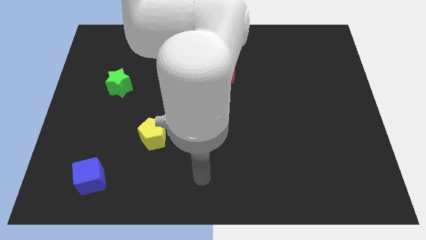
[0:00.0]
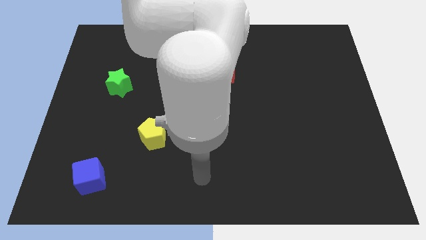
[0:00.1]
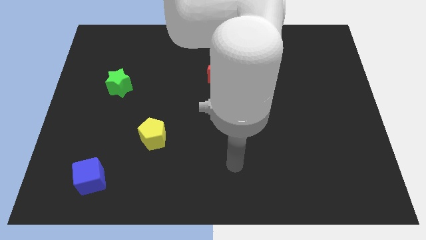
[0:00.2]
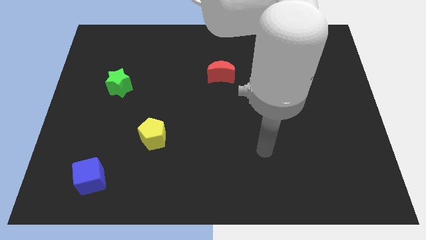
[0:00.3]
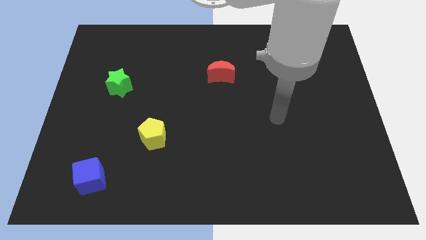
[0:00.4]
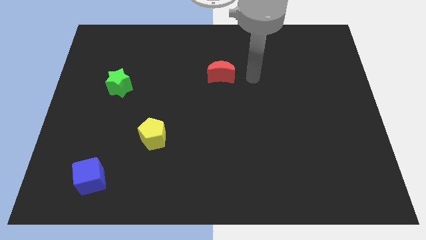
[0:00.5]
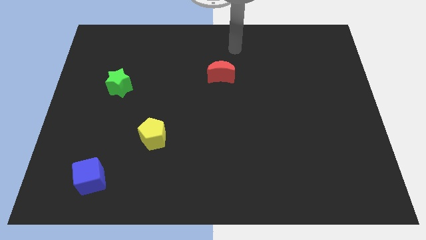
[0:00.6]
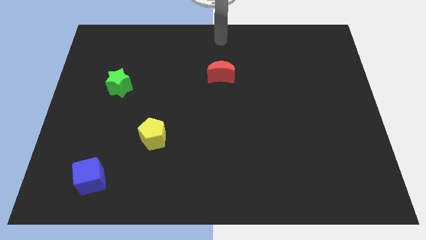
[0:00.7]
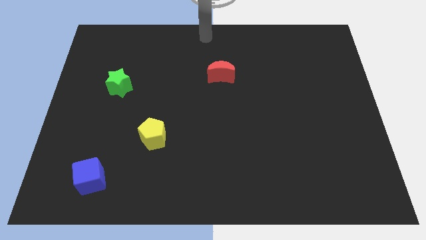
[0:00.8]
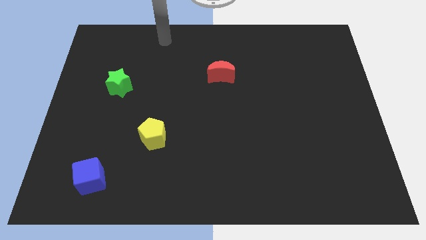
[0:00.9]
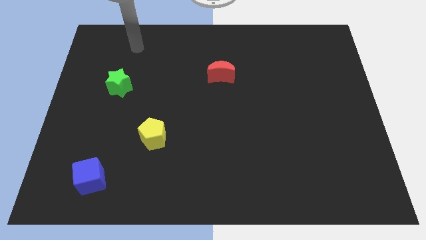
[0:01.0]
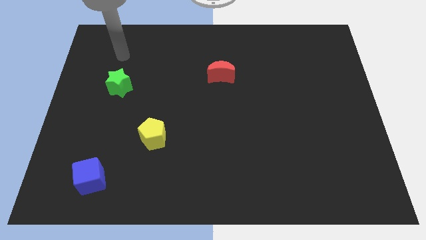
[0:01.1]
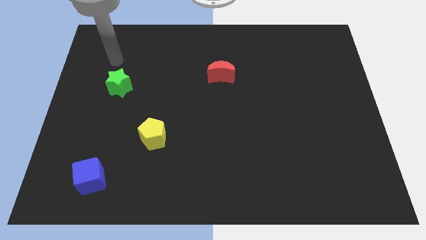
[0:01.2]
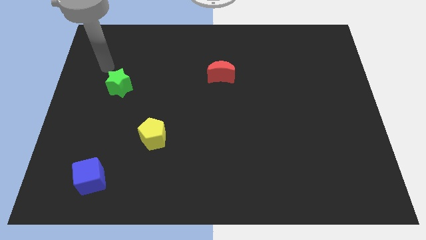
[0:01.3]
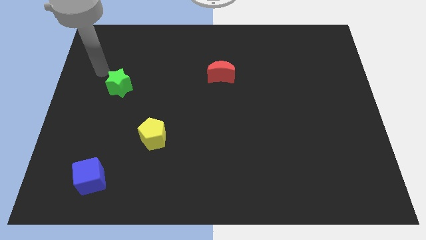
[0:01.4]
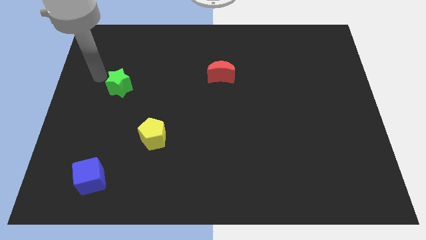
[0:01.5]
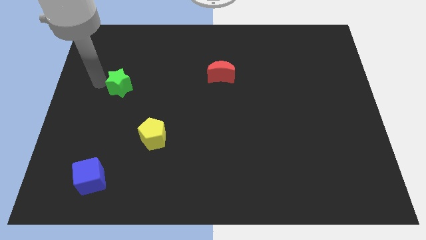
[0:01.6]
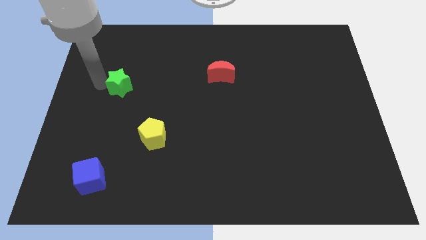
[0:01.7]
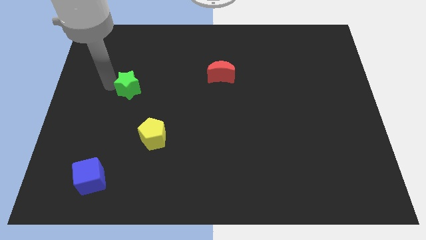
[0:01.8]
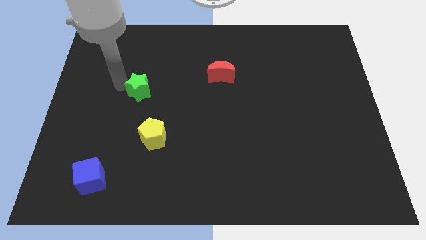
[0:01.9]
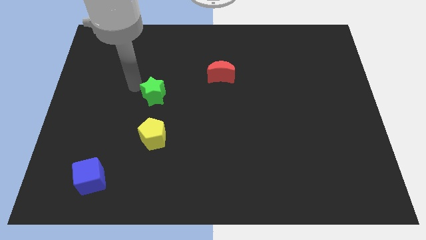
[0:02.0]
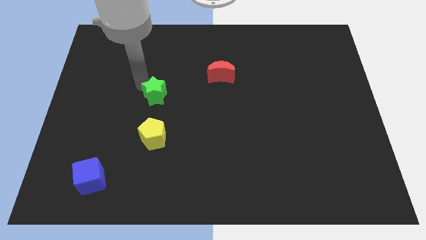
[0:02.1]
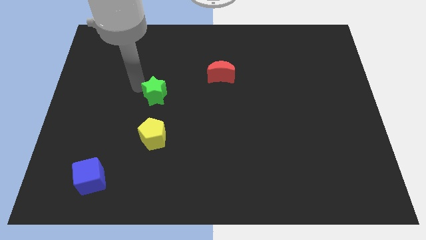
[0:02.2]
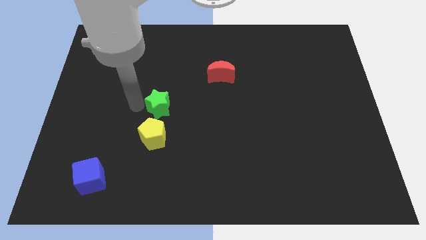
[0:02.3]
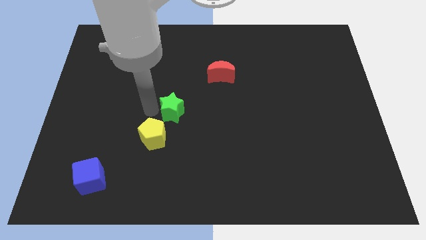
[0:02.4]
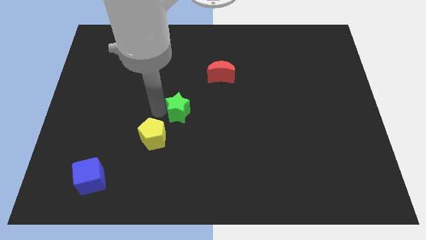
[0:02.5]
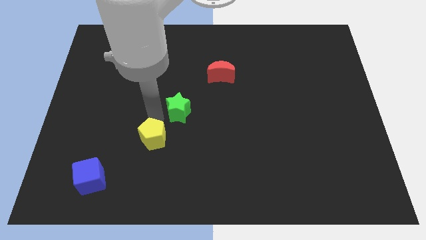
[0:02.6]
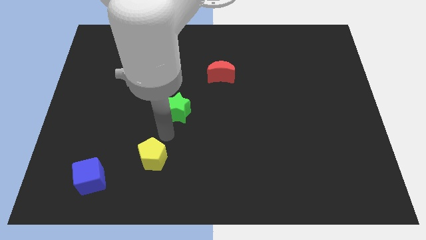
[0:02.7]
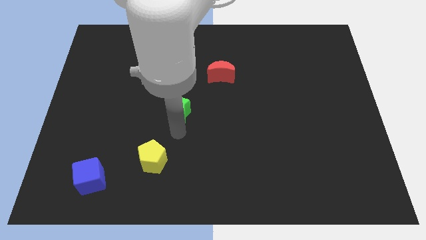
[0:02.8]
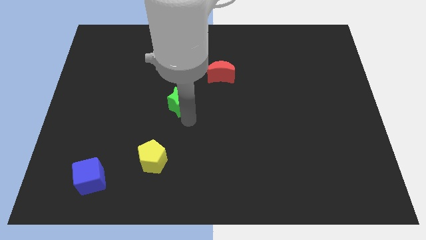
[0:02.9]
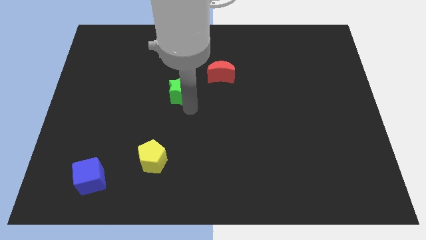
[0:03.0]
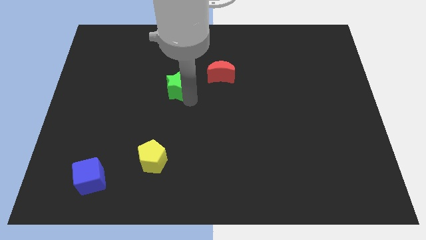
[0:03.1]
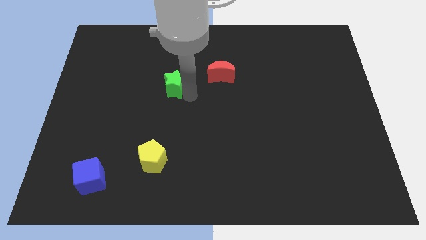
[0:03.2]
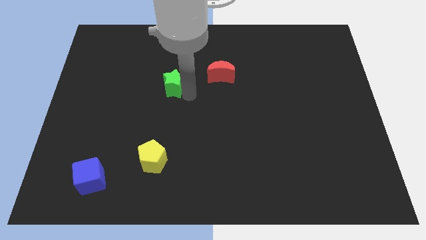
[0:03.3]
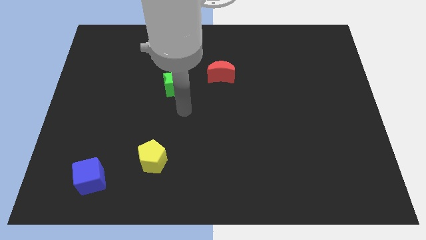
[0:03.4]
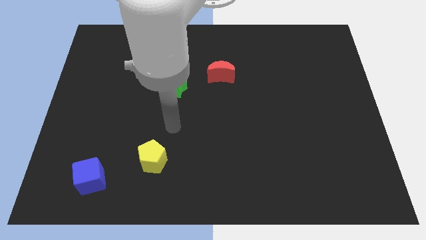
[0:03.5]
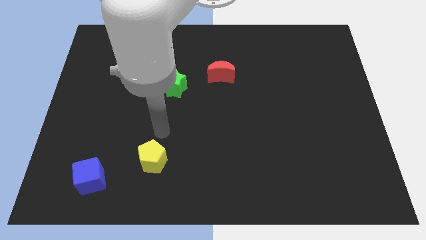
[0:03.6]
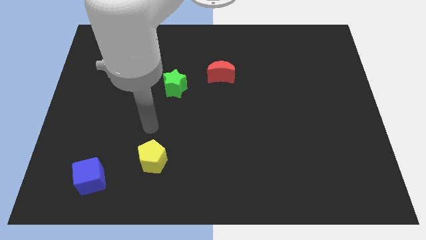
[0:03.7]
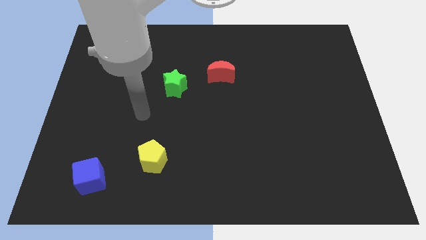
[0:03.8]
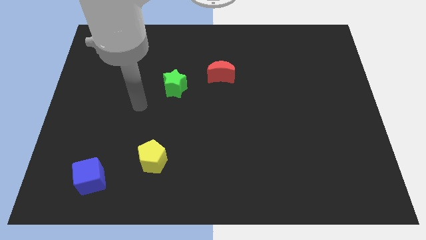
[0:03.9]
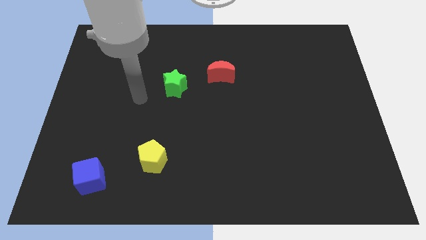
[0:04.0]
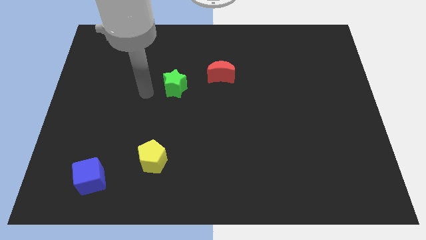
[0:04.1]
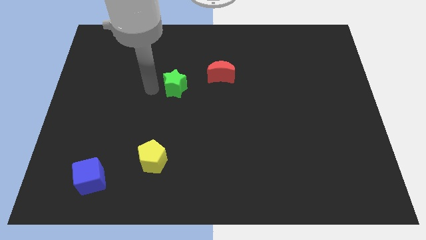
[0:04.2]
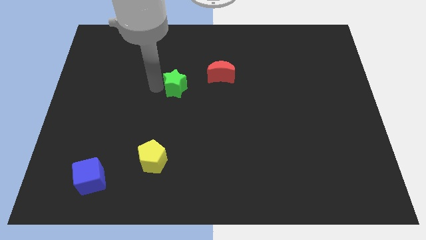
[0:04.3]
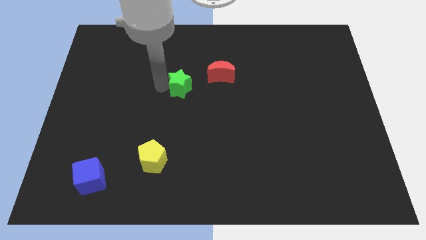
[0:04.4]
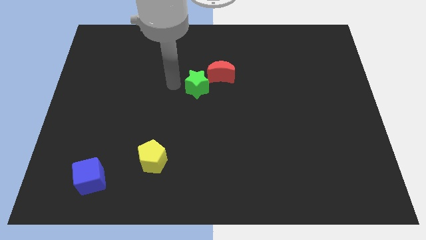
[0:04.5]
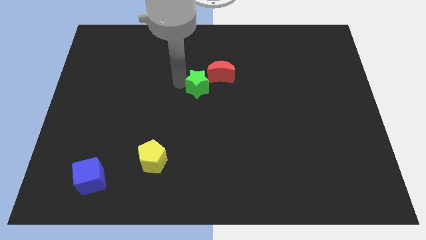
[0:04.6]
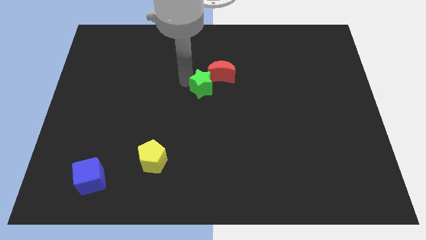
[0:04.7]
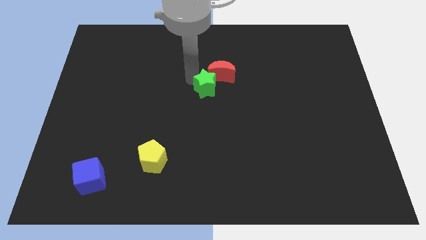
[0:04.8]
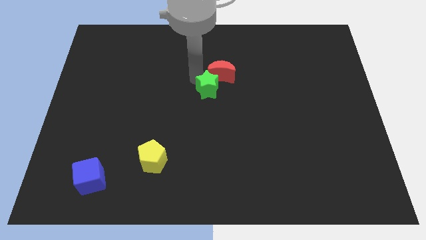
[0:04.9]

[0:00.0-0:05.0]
put the green star next to the red moon

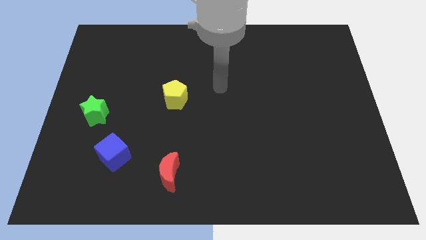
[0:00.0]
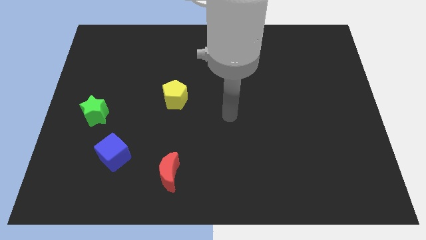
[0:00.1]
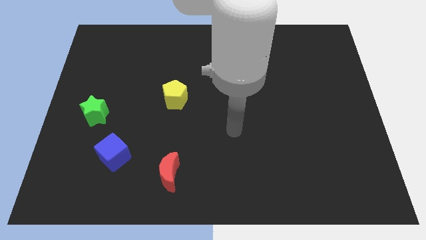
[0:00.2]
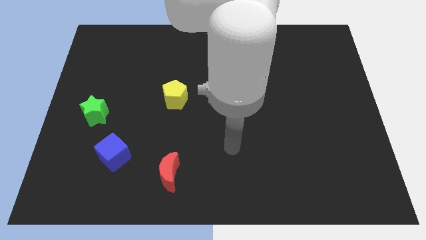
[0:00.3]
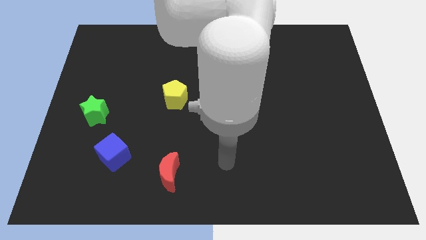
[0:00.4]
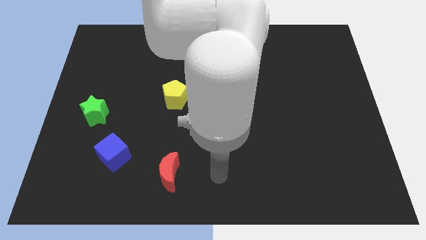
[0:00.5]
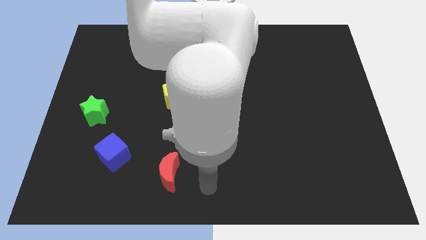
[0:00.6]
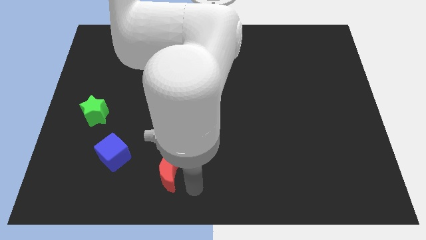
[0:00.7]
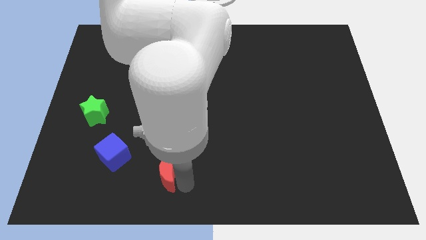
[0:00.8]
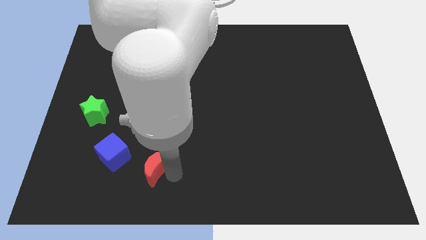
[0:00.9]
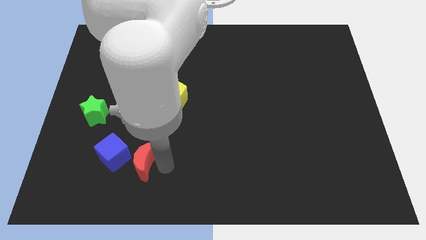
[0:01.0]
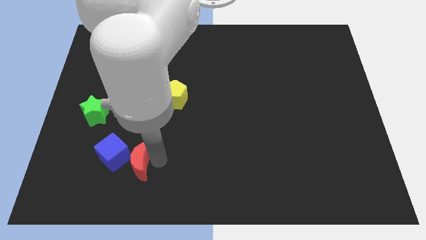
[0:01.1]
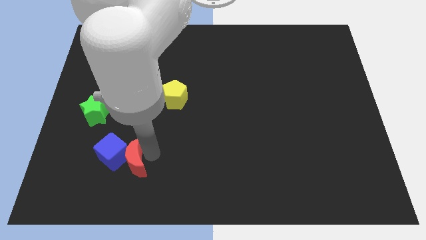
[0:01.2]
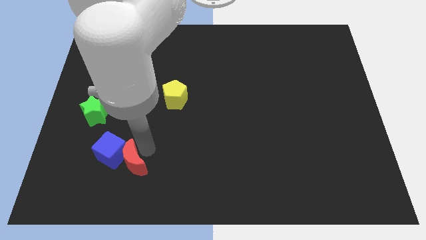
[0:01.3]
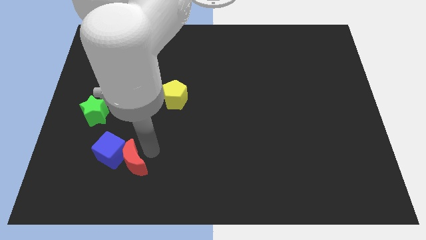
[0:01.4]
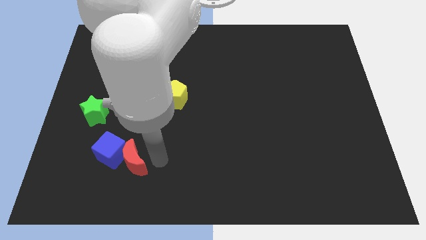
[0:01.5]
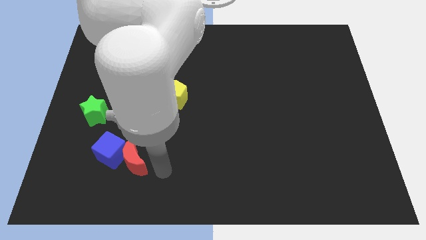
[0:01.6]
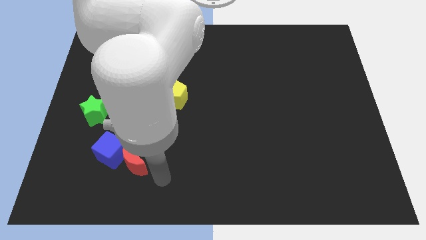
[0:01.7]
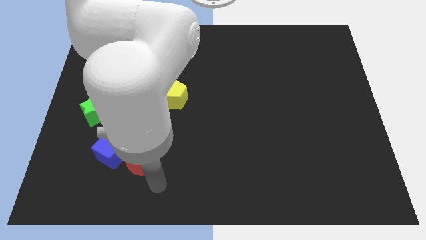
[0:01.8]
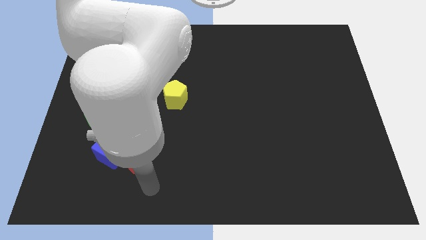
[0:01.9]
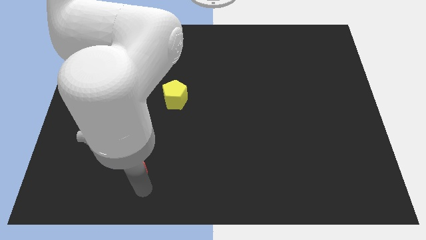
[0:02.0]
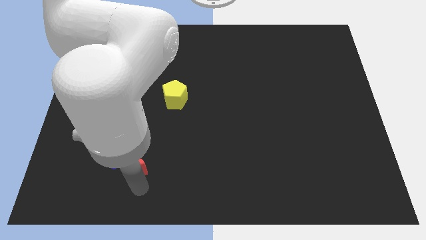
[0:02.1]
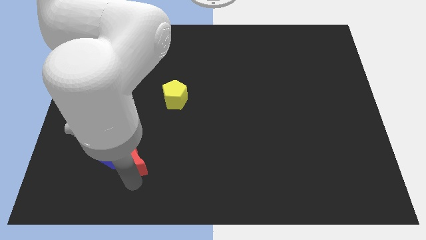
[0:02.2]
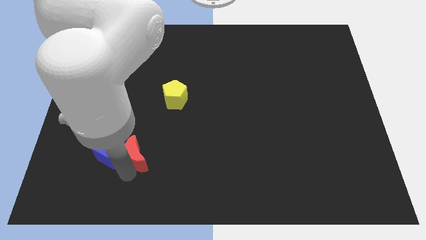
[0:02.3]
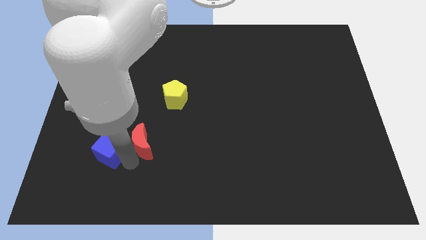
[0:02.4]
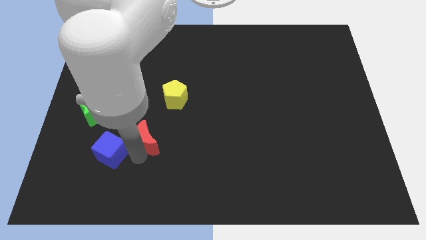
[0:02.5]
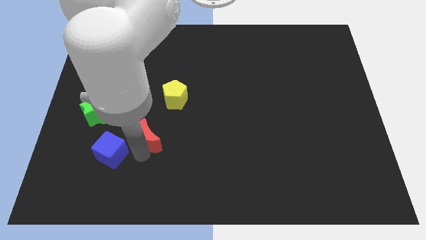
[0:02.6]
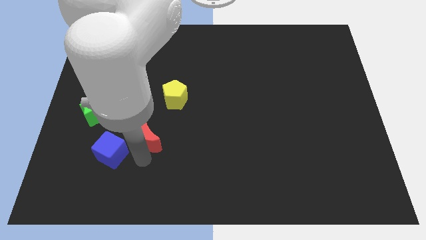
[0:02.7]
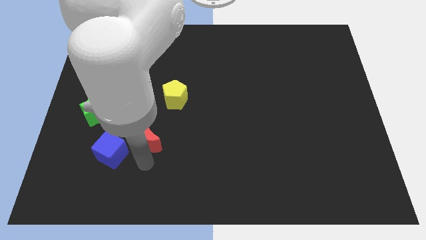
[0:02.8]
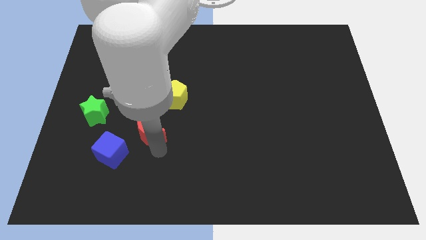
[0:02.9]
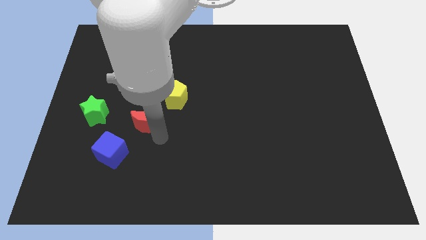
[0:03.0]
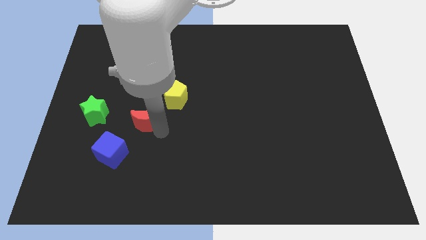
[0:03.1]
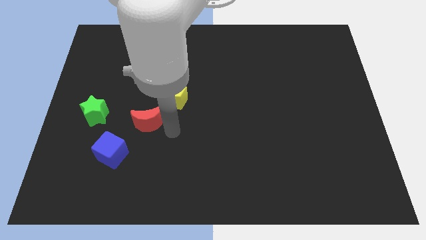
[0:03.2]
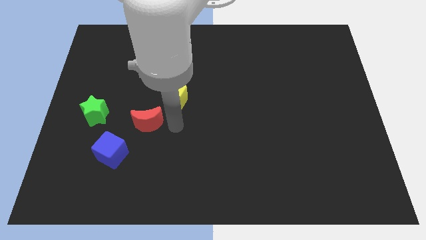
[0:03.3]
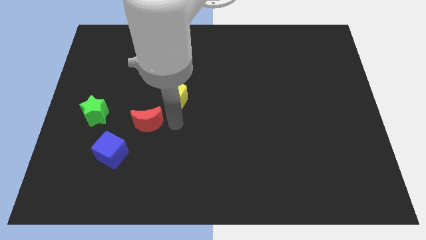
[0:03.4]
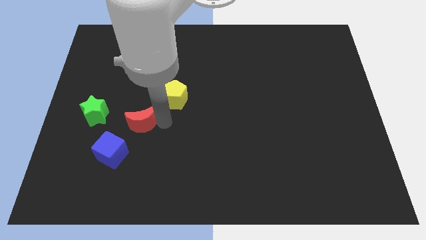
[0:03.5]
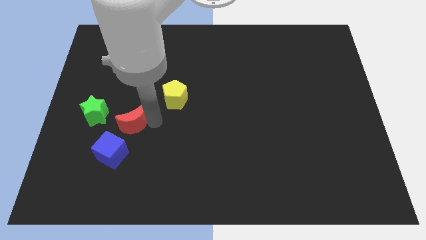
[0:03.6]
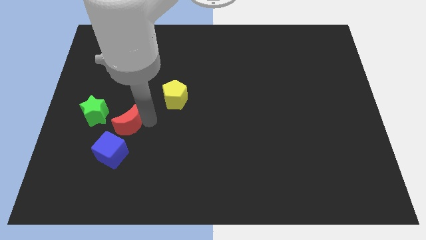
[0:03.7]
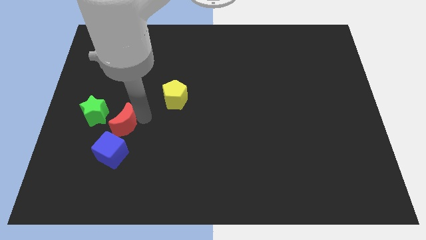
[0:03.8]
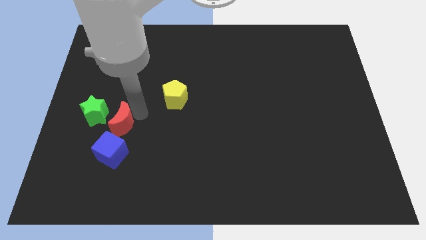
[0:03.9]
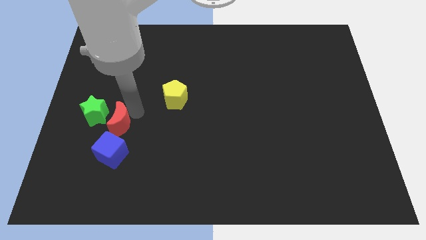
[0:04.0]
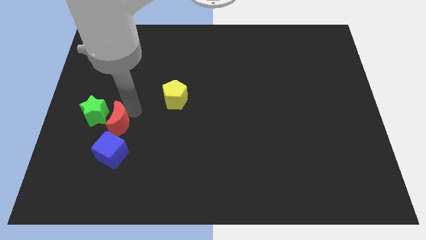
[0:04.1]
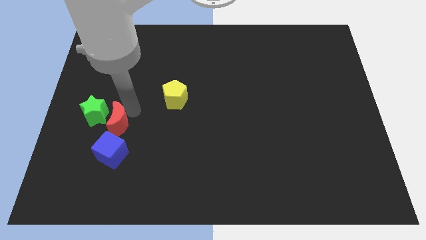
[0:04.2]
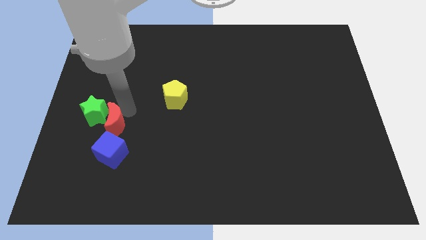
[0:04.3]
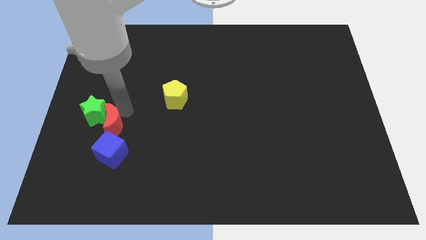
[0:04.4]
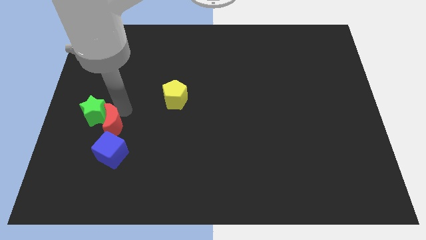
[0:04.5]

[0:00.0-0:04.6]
slide the moon towards the green star
